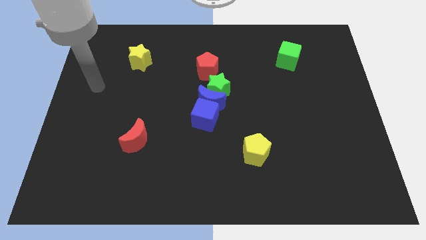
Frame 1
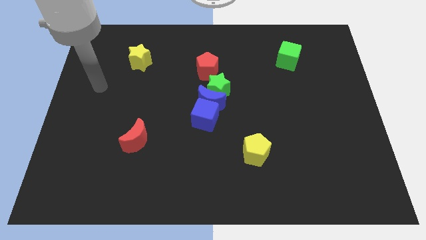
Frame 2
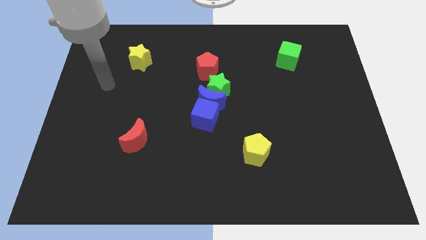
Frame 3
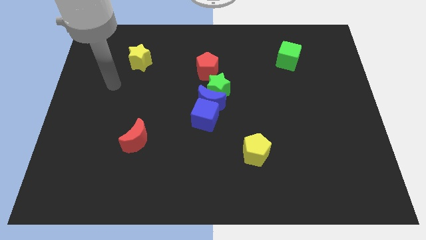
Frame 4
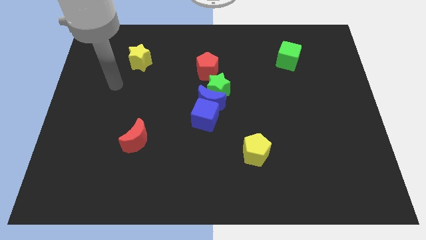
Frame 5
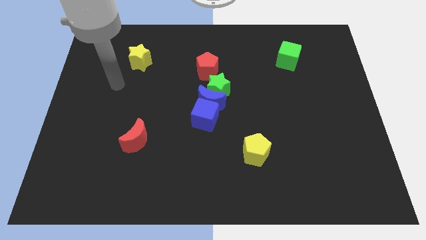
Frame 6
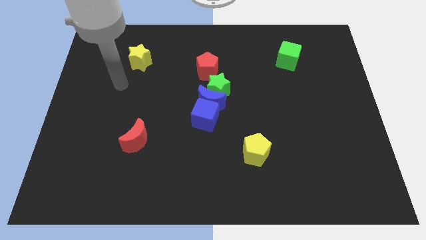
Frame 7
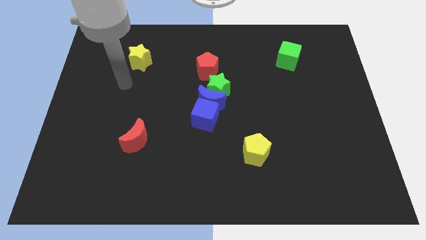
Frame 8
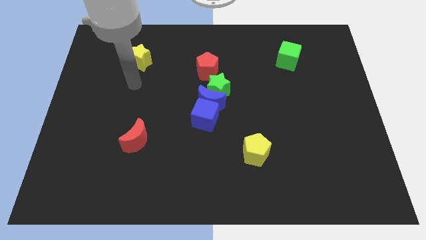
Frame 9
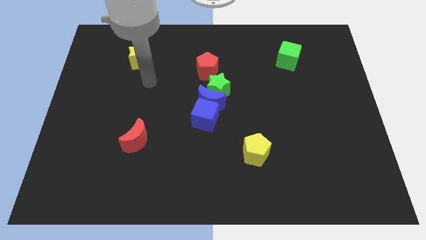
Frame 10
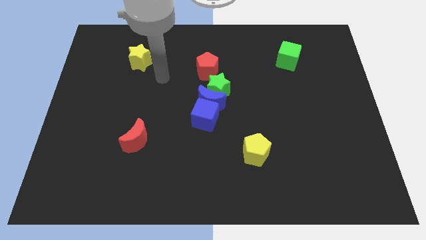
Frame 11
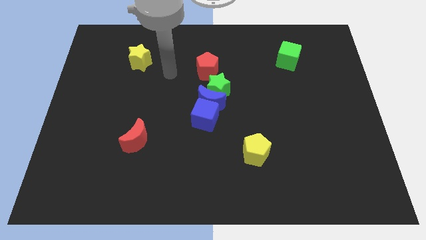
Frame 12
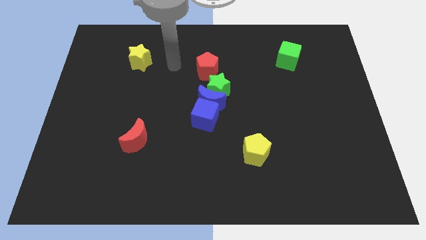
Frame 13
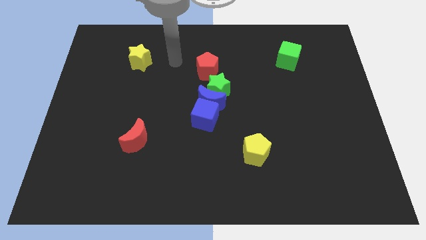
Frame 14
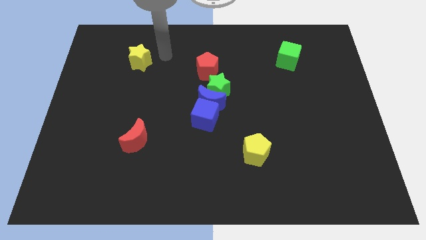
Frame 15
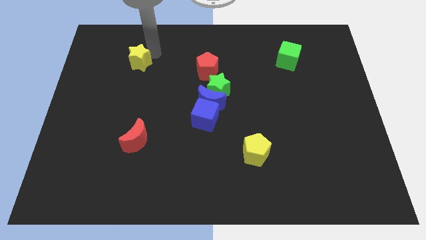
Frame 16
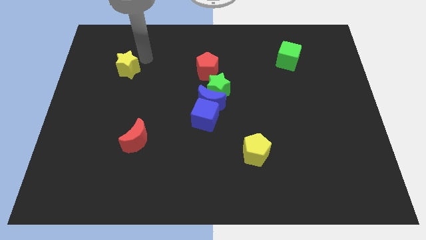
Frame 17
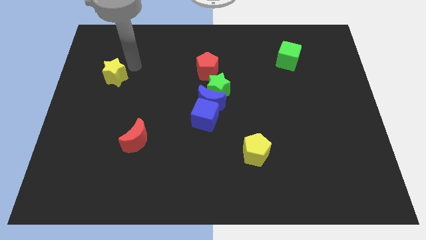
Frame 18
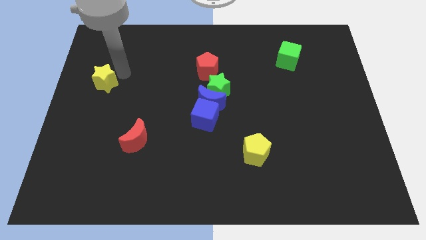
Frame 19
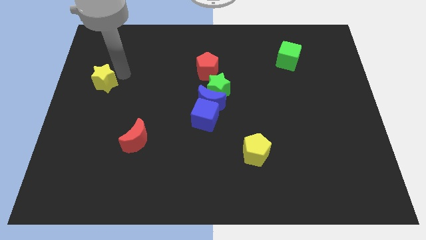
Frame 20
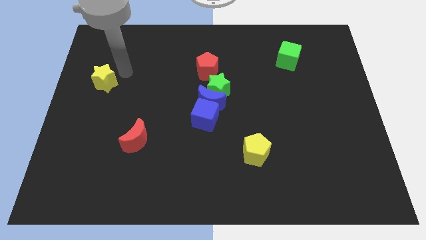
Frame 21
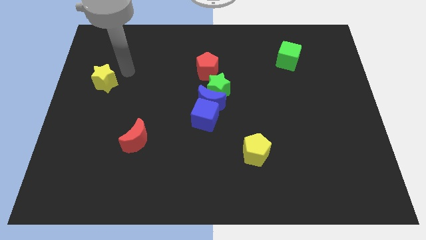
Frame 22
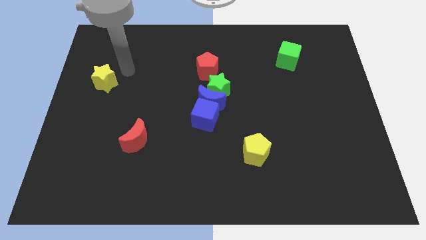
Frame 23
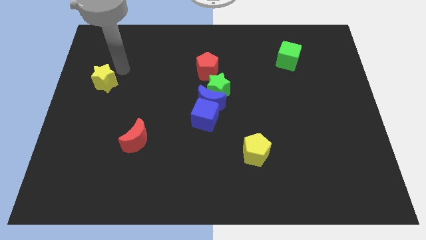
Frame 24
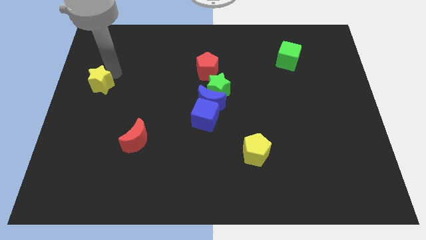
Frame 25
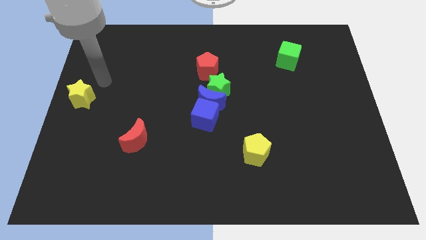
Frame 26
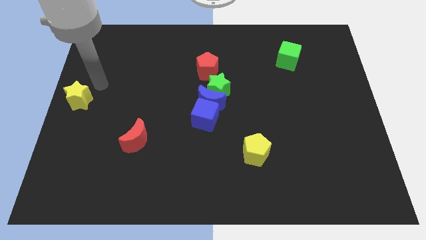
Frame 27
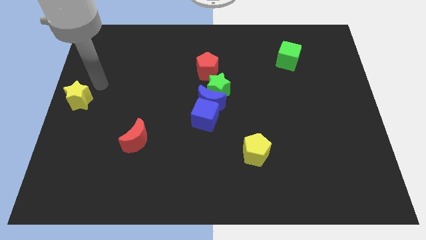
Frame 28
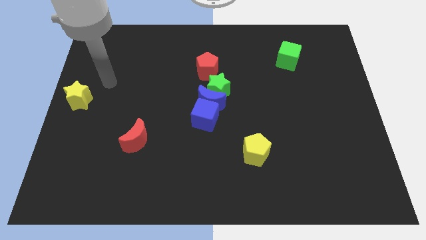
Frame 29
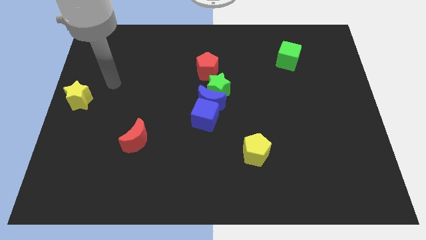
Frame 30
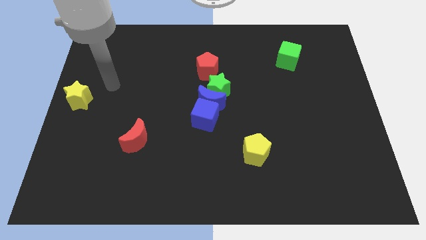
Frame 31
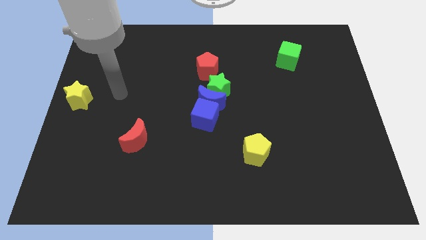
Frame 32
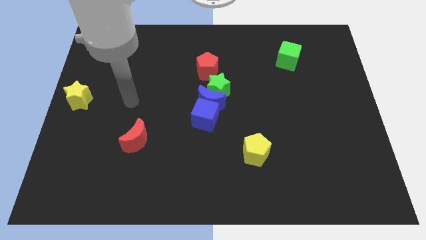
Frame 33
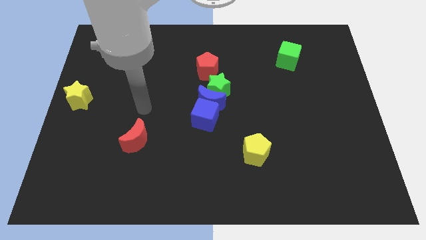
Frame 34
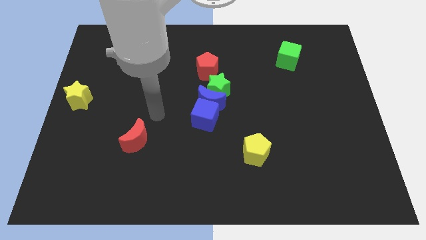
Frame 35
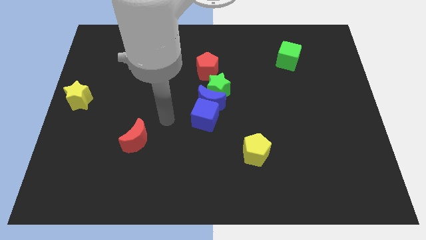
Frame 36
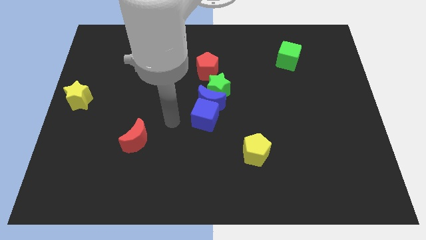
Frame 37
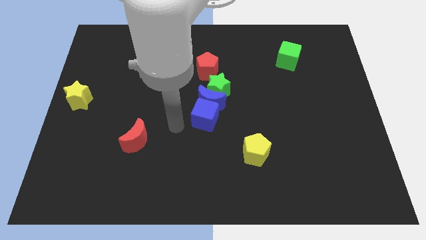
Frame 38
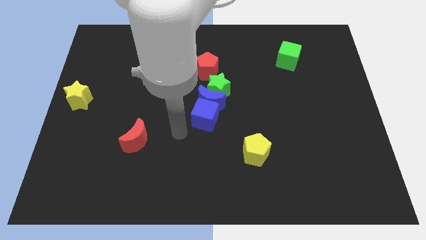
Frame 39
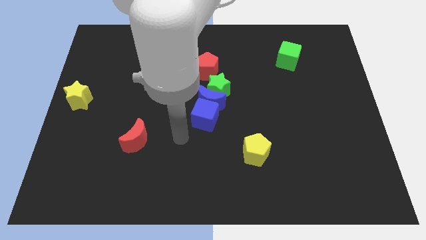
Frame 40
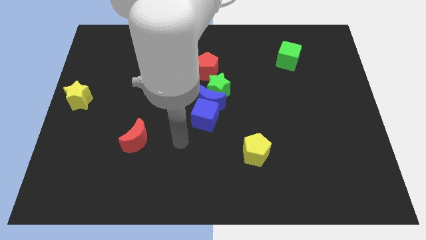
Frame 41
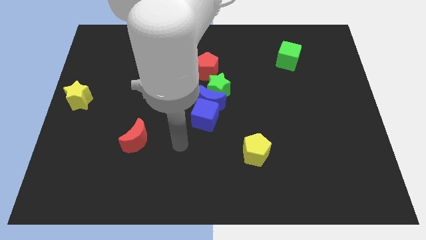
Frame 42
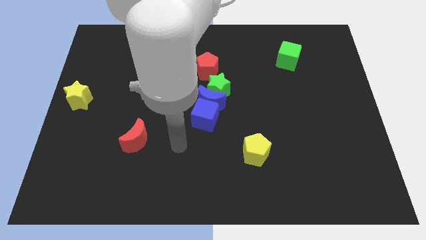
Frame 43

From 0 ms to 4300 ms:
push the yellow star towards the center left side of the board

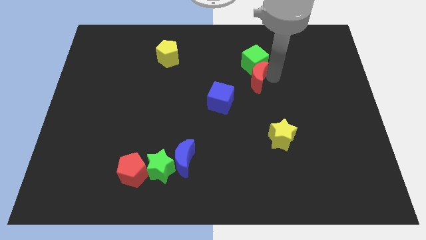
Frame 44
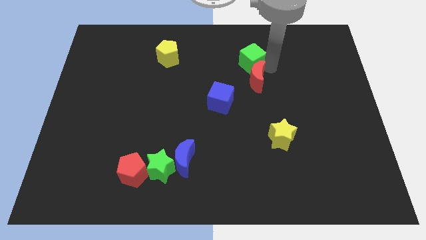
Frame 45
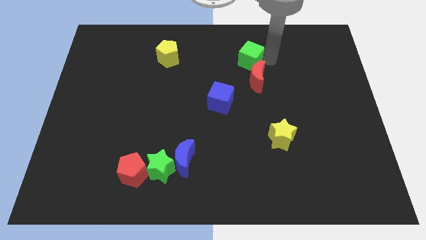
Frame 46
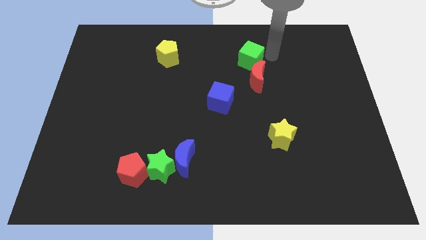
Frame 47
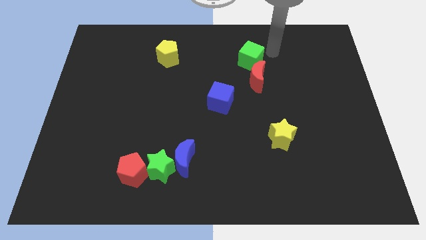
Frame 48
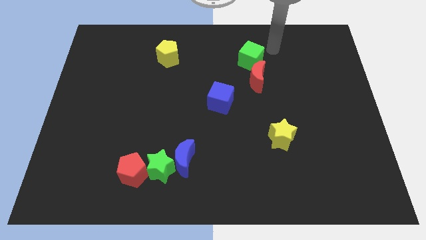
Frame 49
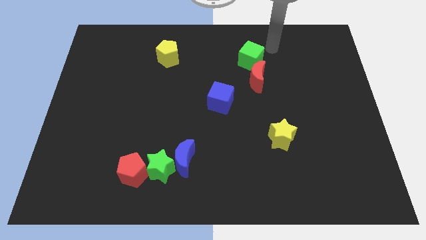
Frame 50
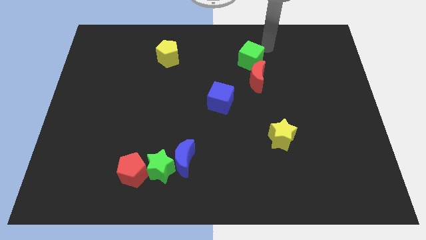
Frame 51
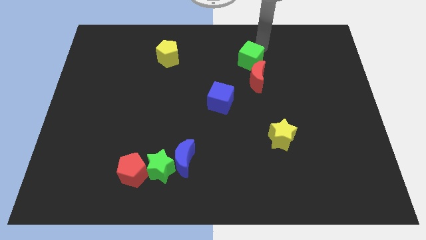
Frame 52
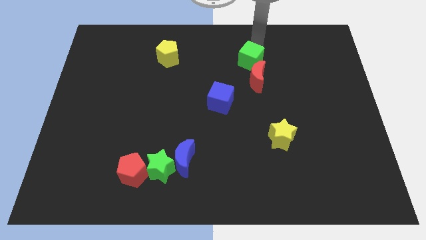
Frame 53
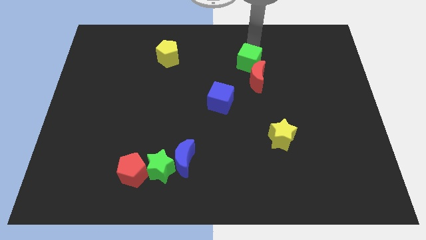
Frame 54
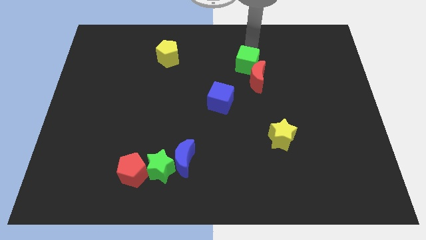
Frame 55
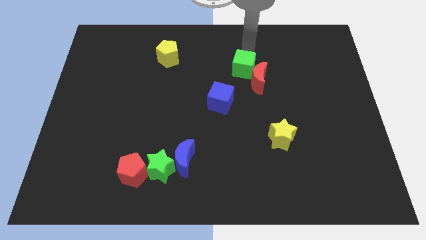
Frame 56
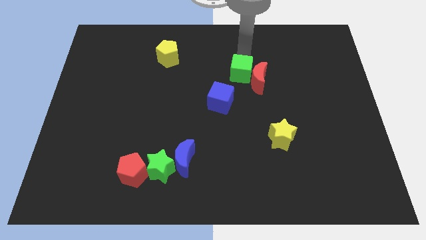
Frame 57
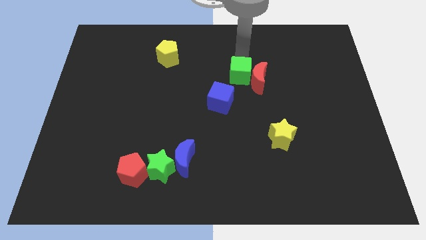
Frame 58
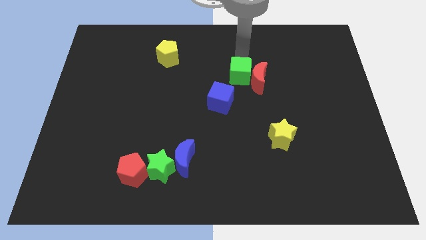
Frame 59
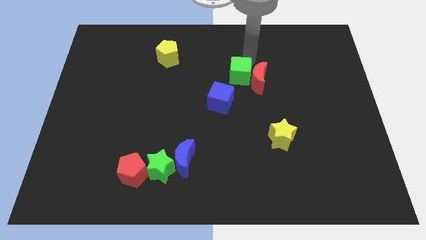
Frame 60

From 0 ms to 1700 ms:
push green cube in between red moon and blue cube

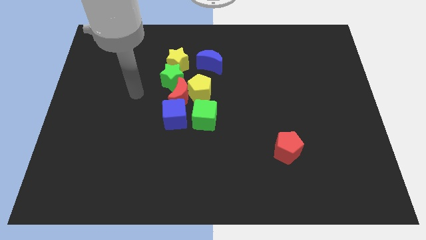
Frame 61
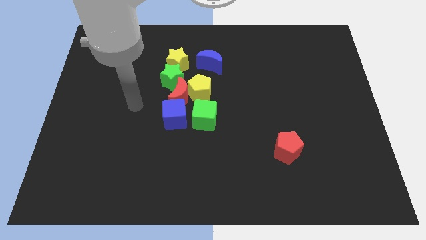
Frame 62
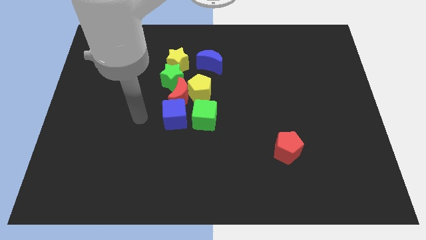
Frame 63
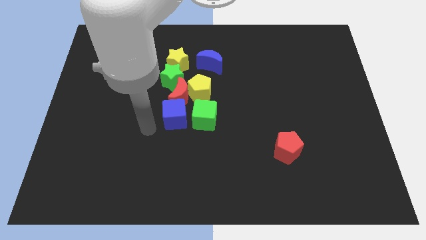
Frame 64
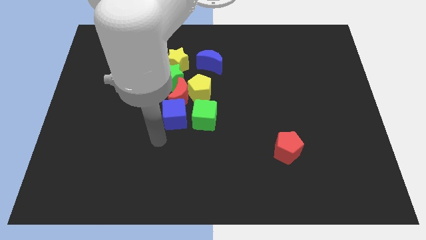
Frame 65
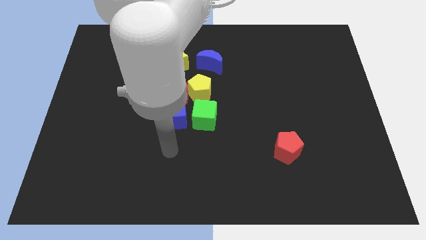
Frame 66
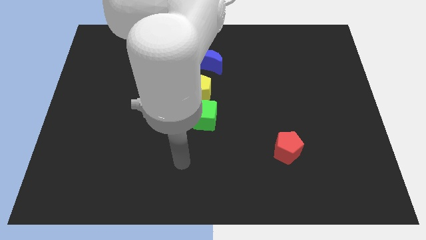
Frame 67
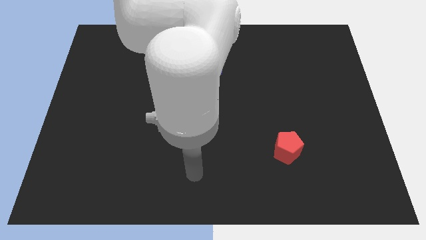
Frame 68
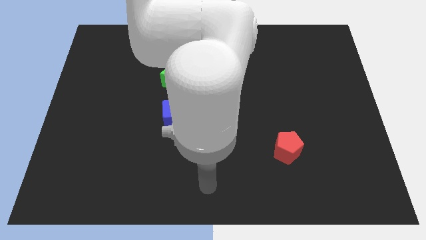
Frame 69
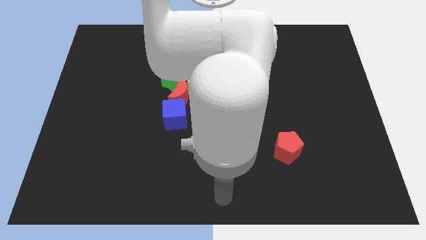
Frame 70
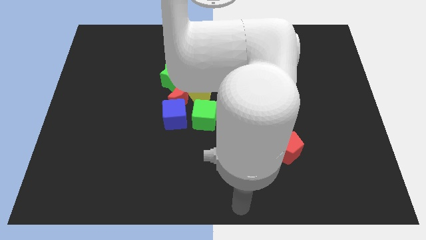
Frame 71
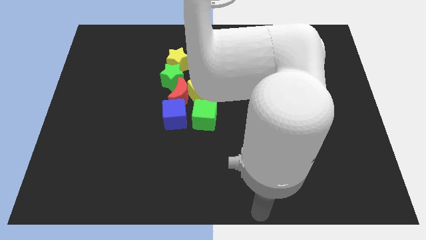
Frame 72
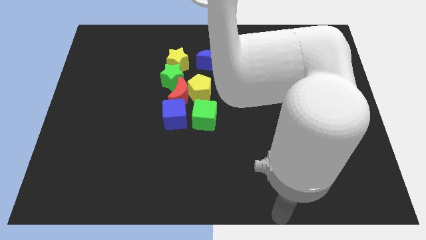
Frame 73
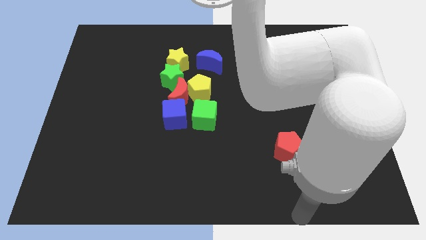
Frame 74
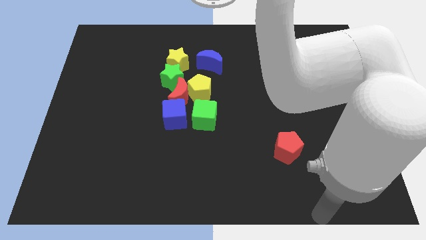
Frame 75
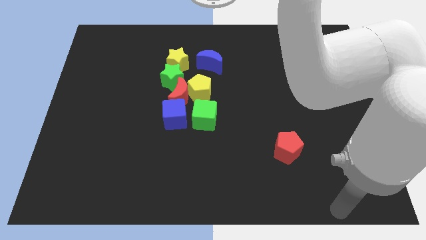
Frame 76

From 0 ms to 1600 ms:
move your hand towards the bottom right

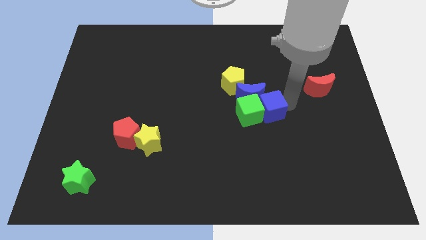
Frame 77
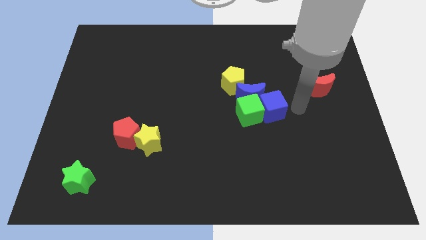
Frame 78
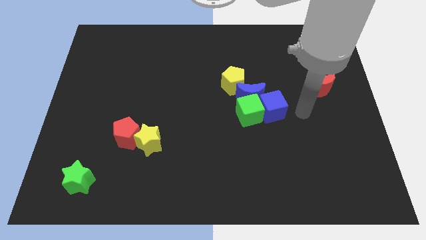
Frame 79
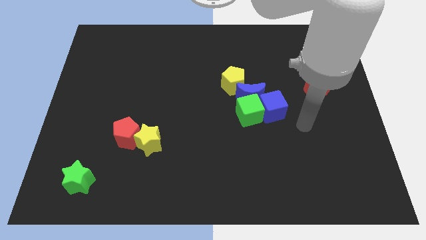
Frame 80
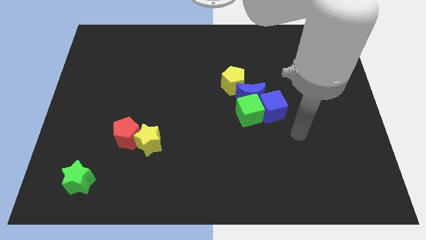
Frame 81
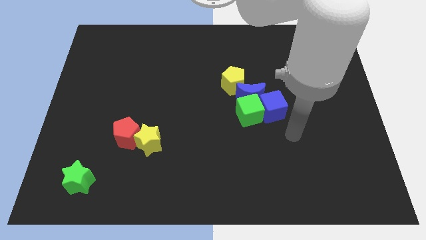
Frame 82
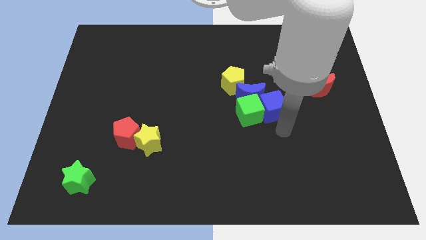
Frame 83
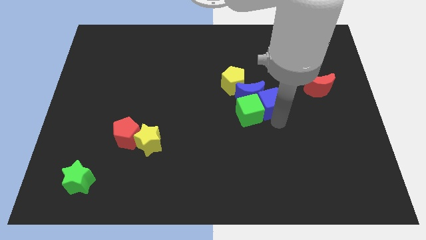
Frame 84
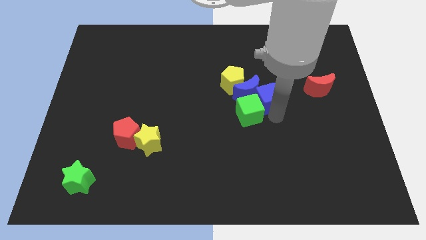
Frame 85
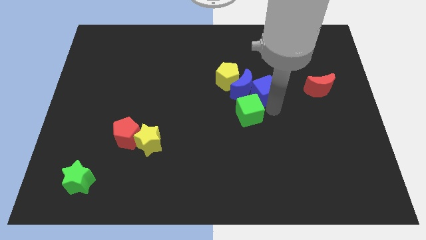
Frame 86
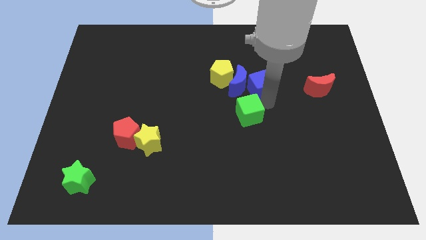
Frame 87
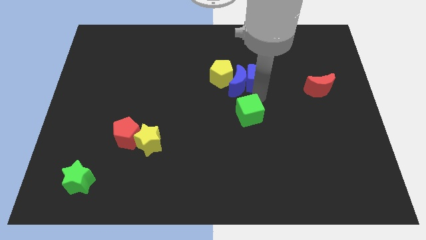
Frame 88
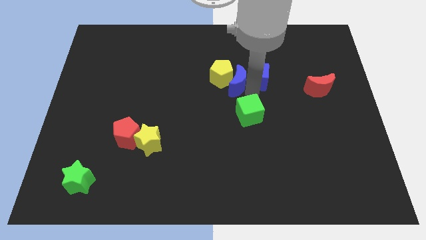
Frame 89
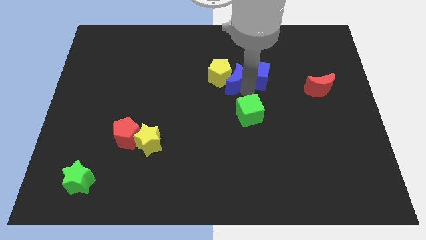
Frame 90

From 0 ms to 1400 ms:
push blue cube toward upward
